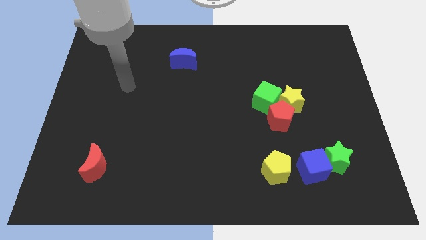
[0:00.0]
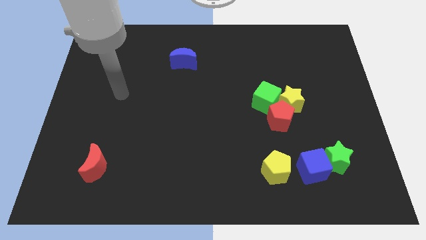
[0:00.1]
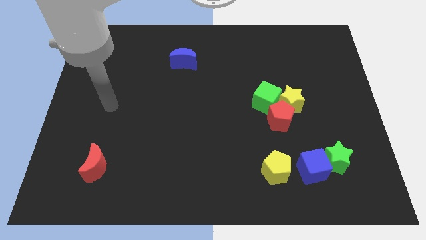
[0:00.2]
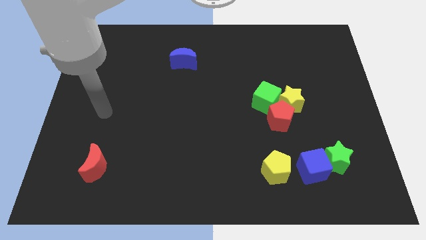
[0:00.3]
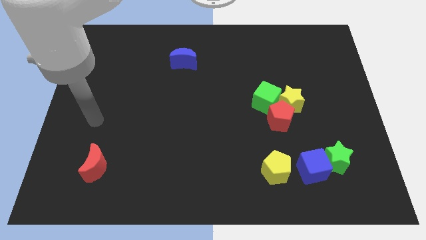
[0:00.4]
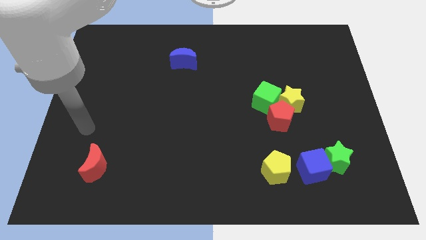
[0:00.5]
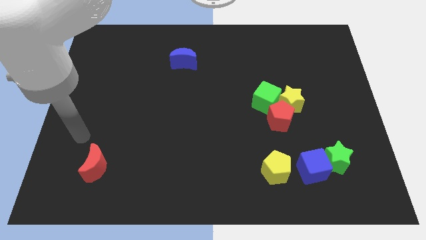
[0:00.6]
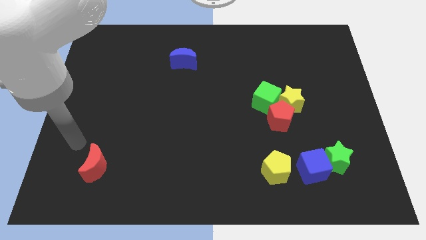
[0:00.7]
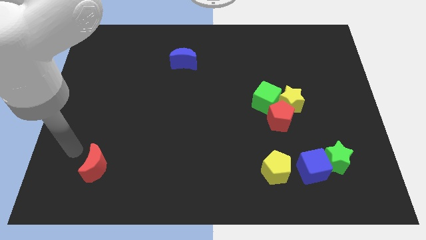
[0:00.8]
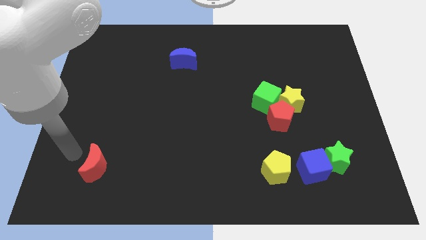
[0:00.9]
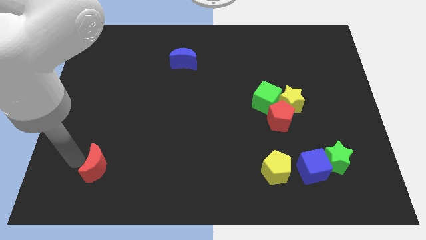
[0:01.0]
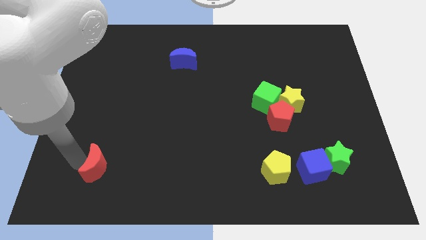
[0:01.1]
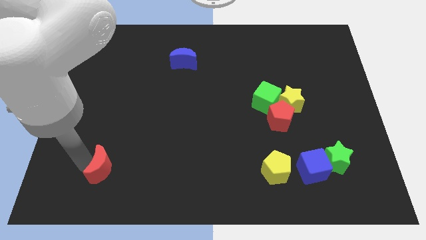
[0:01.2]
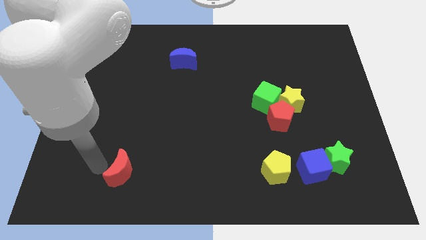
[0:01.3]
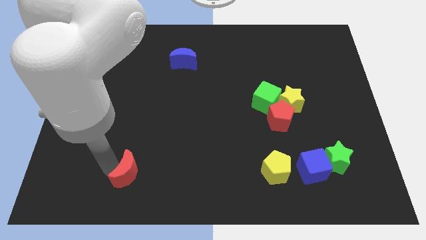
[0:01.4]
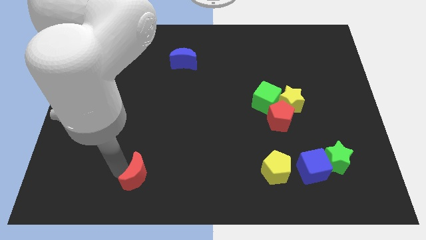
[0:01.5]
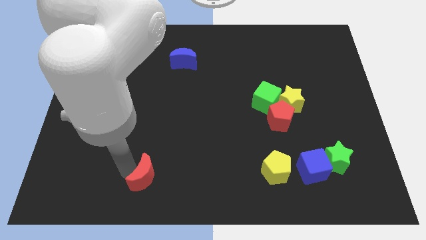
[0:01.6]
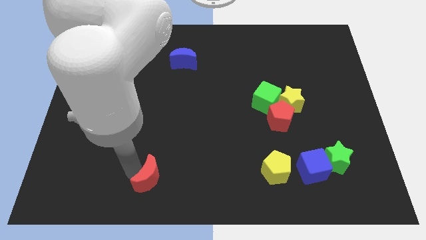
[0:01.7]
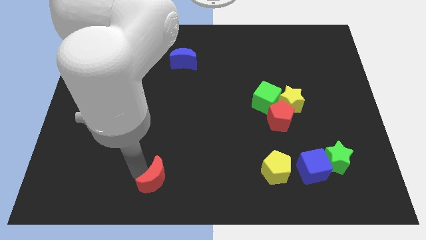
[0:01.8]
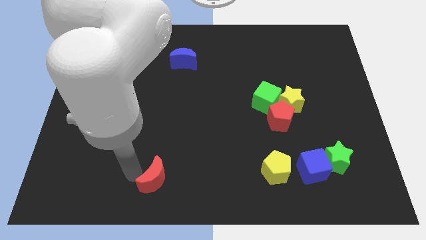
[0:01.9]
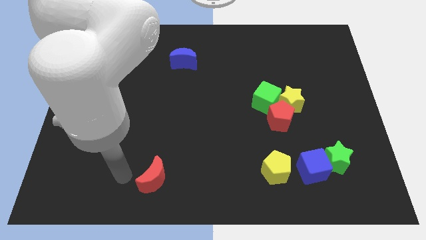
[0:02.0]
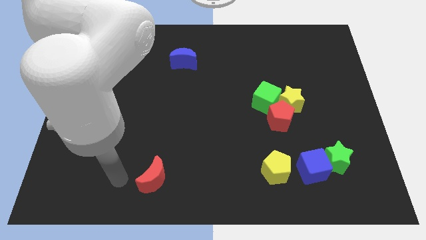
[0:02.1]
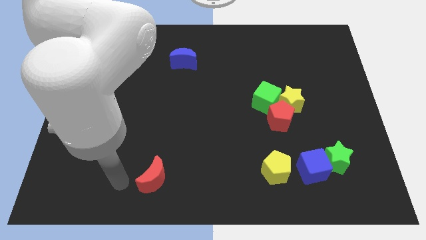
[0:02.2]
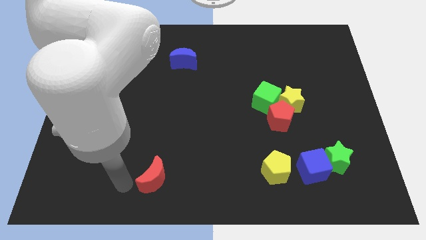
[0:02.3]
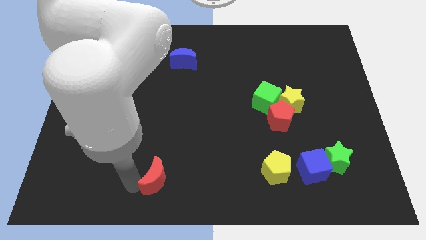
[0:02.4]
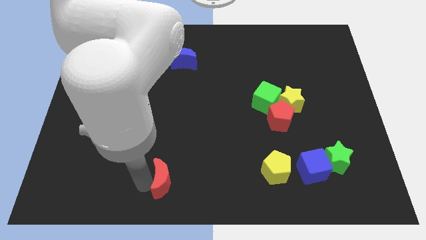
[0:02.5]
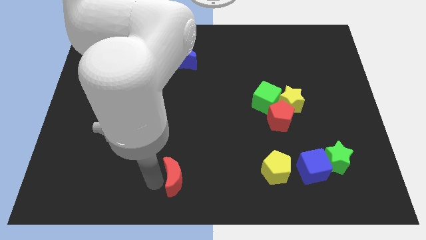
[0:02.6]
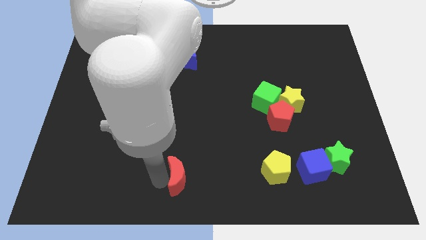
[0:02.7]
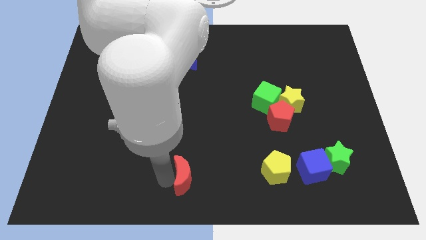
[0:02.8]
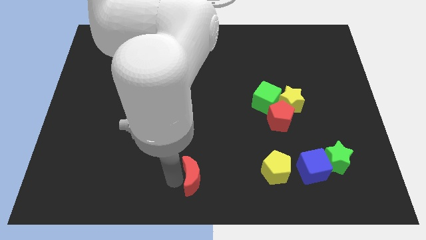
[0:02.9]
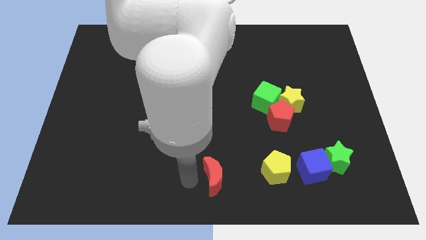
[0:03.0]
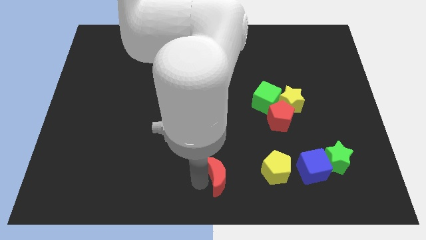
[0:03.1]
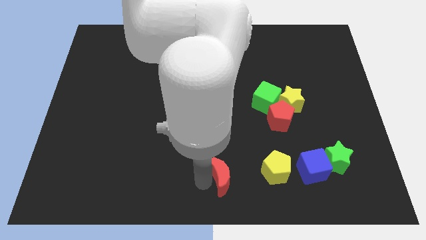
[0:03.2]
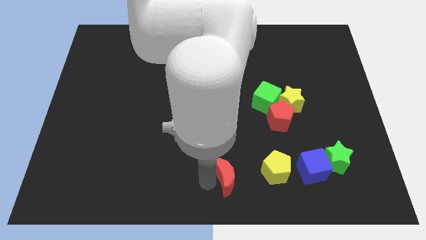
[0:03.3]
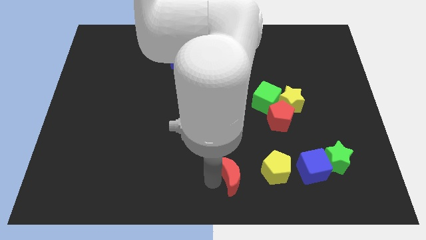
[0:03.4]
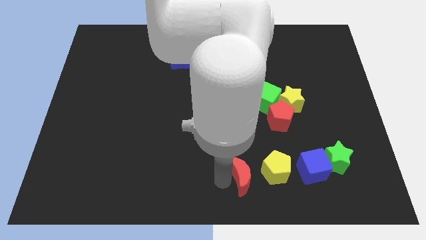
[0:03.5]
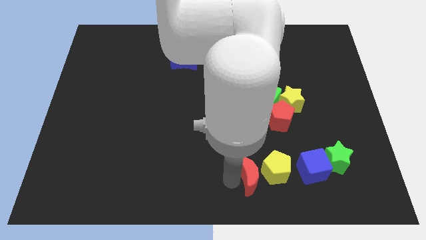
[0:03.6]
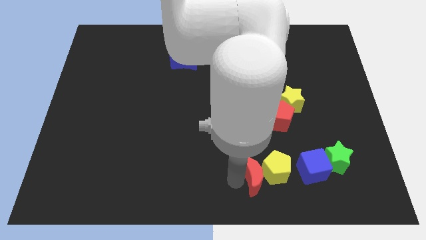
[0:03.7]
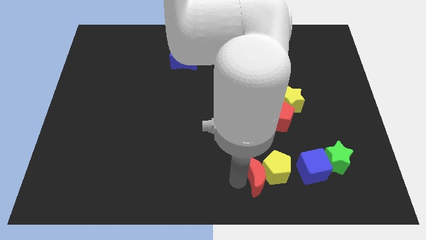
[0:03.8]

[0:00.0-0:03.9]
push the red moon towards the yellow pentagon

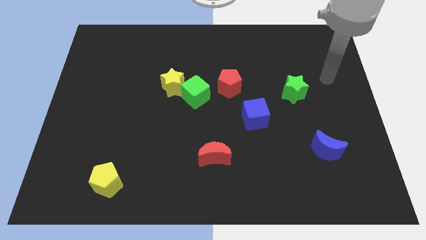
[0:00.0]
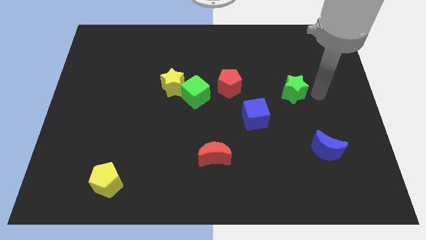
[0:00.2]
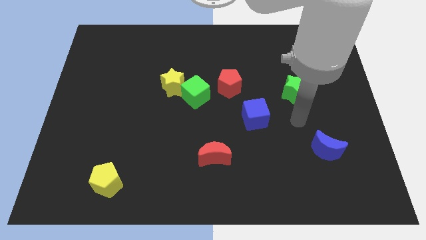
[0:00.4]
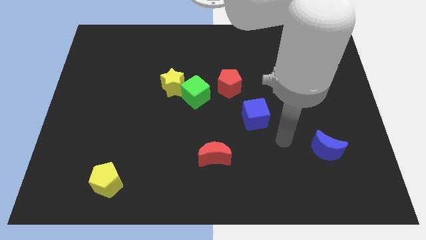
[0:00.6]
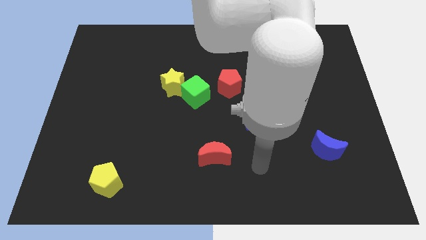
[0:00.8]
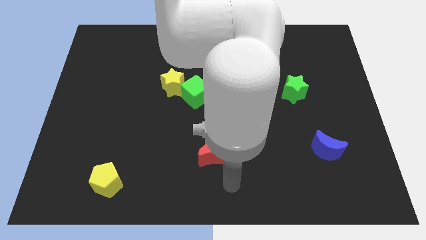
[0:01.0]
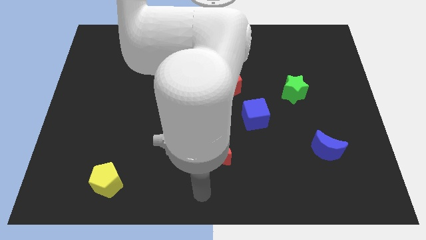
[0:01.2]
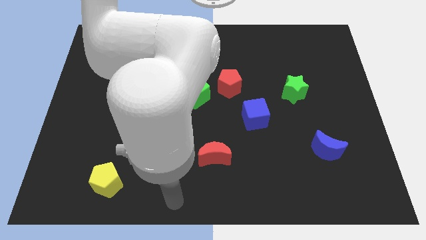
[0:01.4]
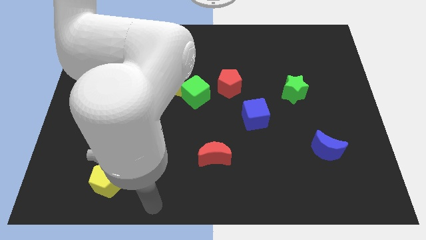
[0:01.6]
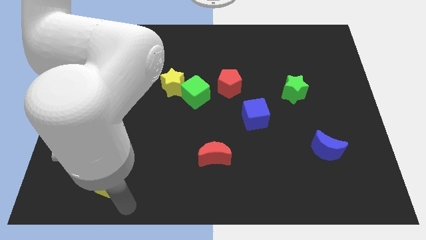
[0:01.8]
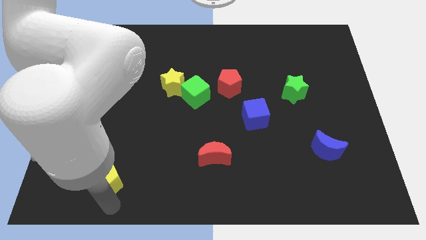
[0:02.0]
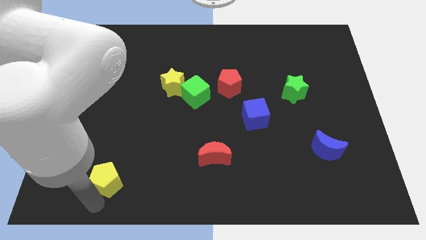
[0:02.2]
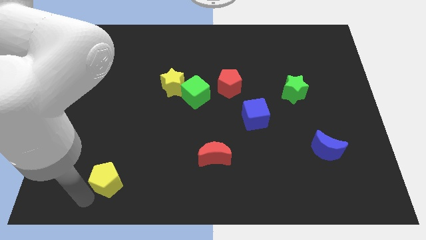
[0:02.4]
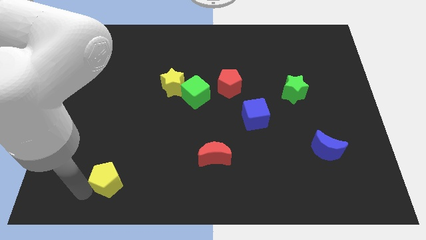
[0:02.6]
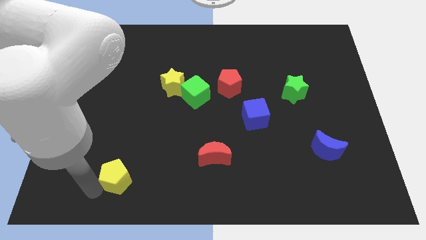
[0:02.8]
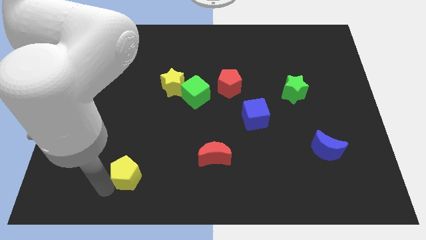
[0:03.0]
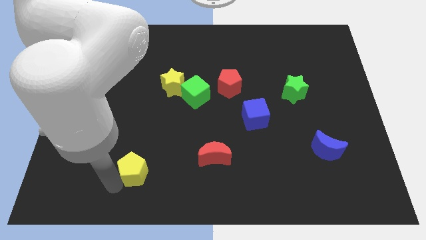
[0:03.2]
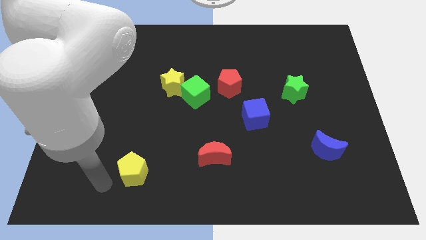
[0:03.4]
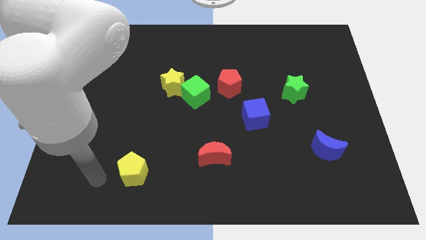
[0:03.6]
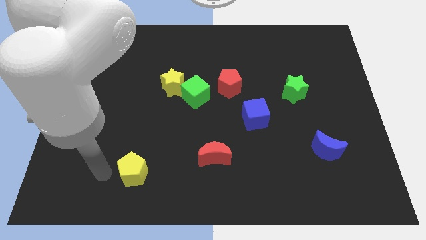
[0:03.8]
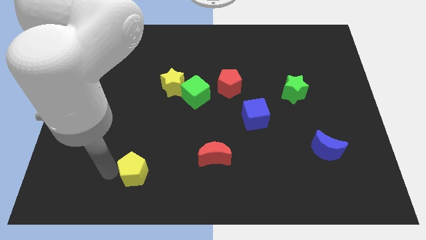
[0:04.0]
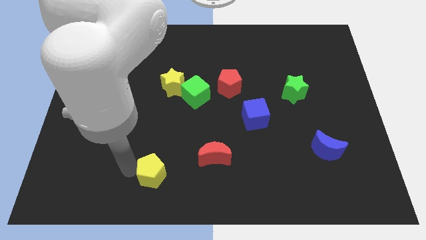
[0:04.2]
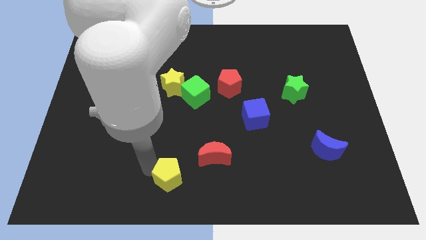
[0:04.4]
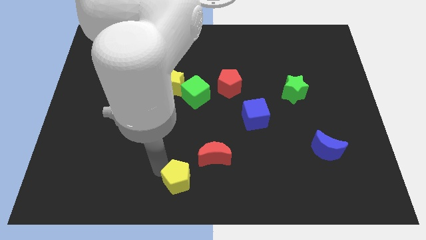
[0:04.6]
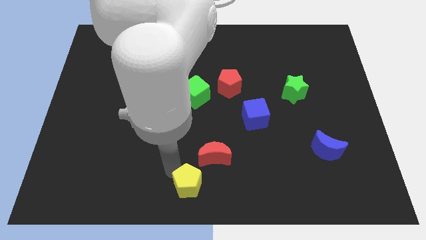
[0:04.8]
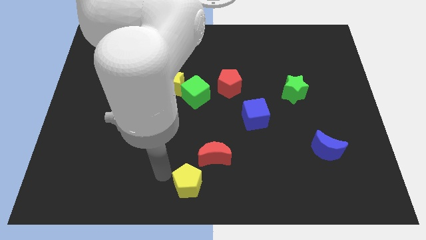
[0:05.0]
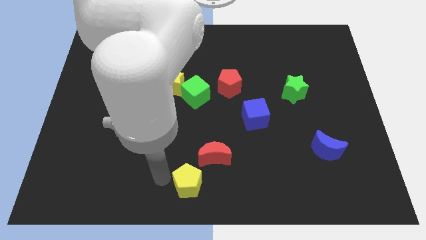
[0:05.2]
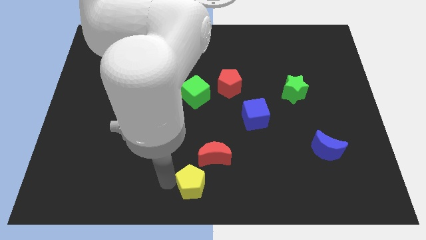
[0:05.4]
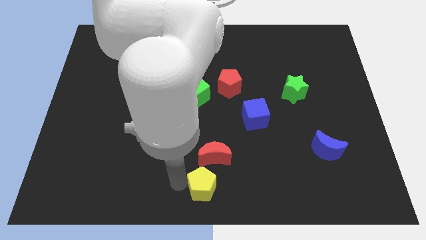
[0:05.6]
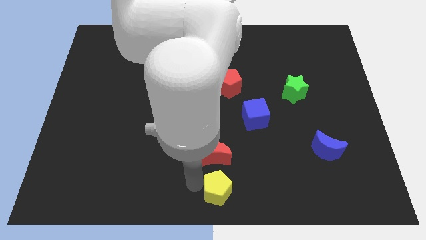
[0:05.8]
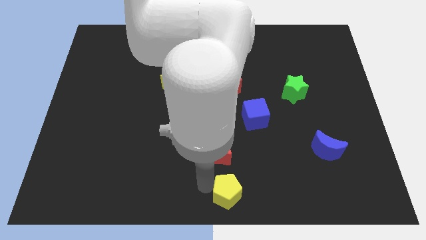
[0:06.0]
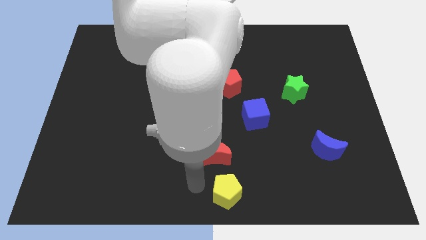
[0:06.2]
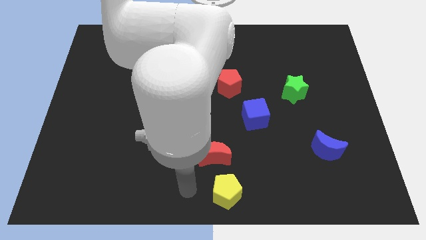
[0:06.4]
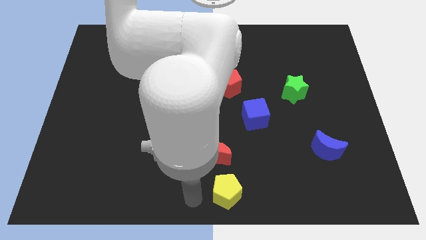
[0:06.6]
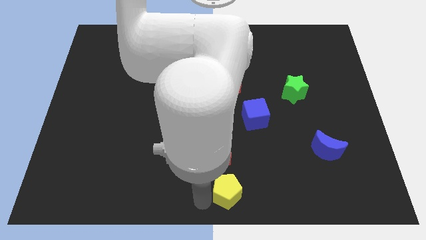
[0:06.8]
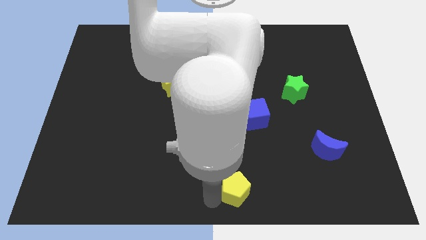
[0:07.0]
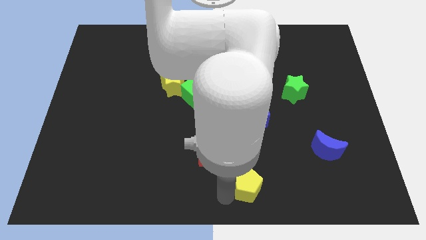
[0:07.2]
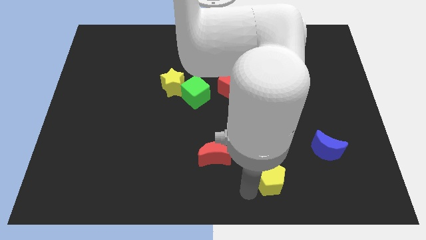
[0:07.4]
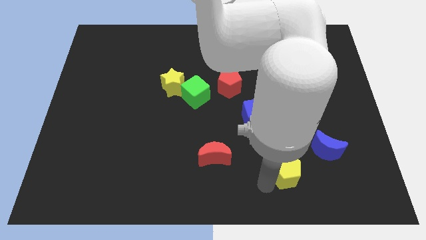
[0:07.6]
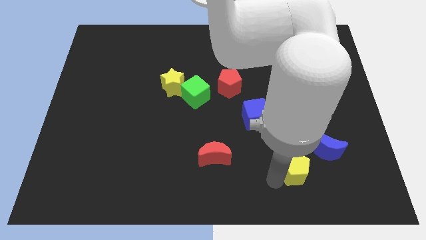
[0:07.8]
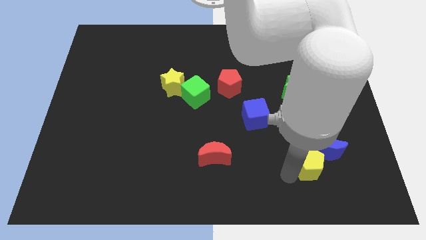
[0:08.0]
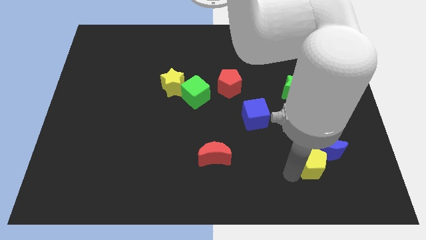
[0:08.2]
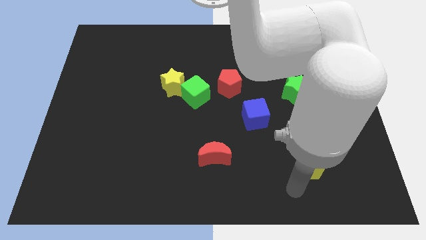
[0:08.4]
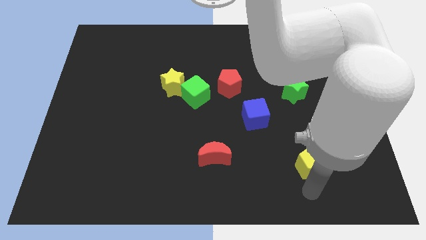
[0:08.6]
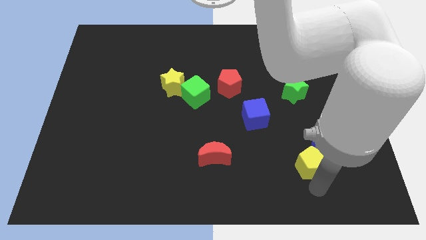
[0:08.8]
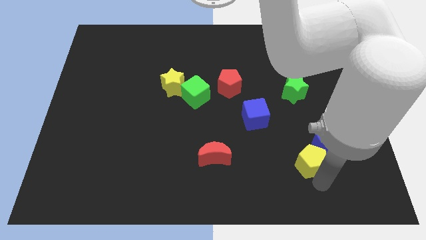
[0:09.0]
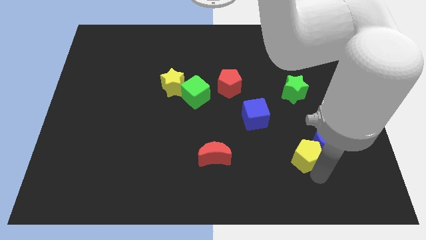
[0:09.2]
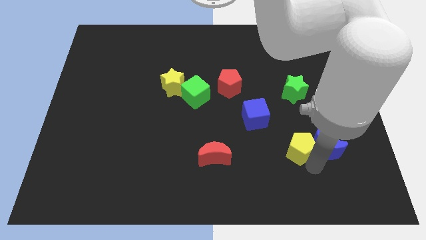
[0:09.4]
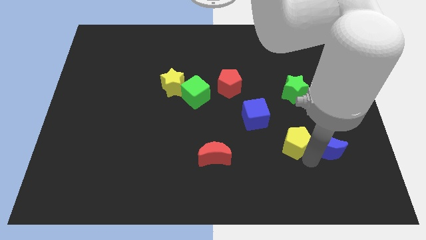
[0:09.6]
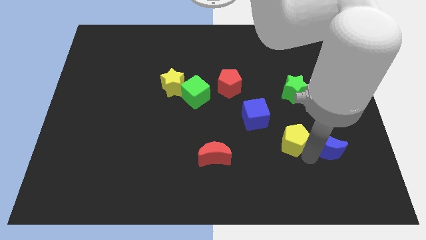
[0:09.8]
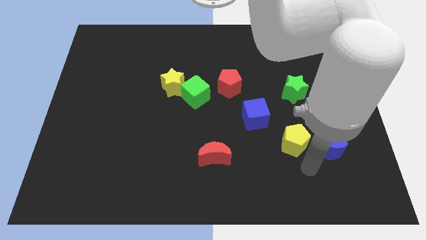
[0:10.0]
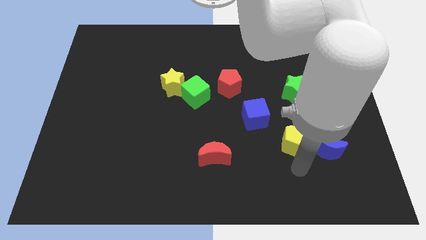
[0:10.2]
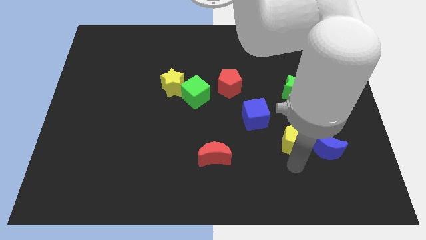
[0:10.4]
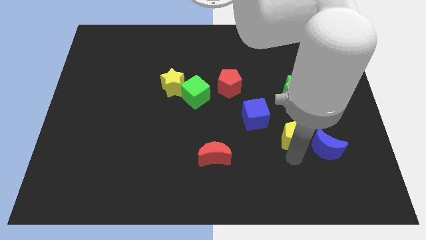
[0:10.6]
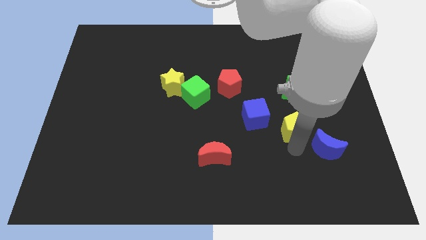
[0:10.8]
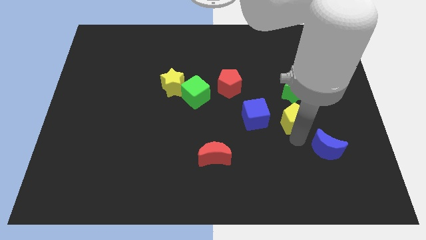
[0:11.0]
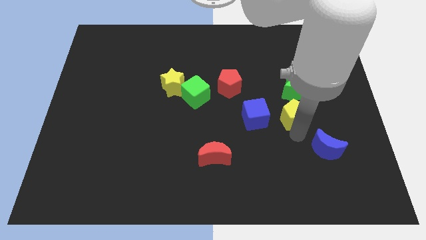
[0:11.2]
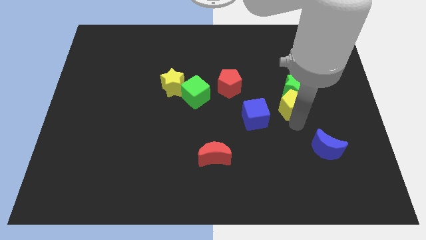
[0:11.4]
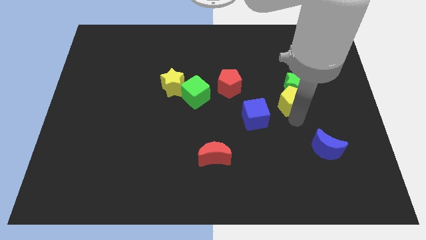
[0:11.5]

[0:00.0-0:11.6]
move the yellow pentagon close to the green star
